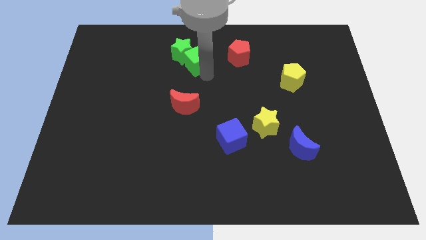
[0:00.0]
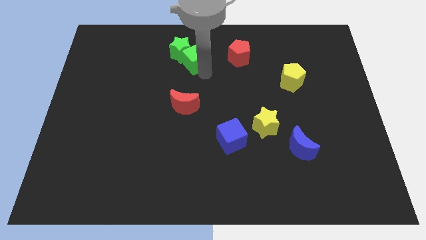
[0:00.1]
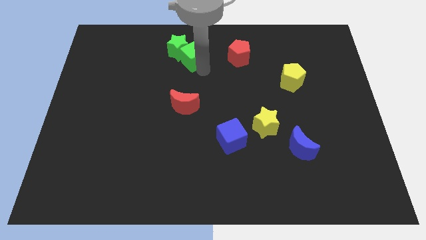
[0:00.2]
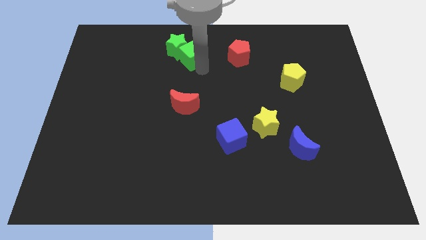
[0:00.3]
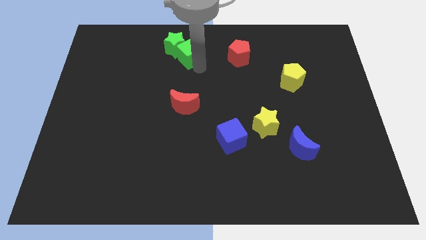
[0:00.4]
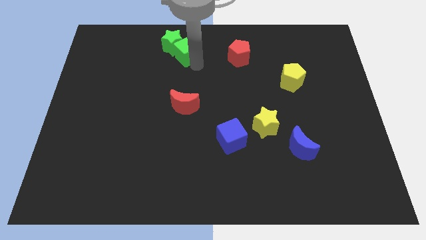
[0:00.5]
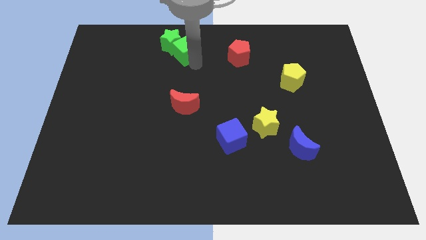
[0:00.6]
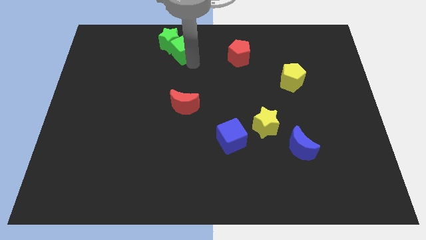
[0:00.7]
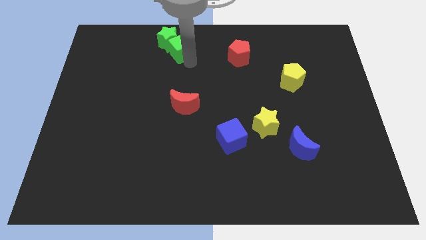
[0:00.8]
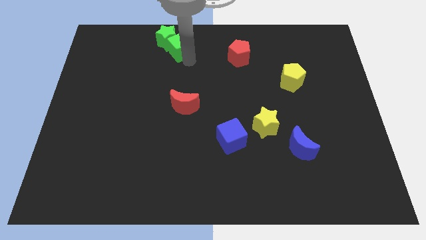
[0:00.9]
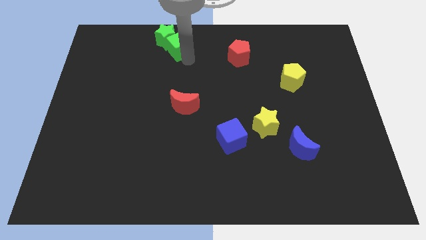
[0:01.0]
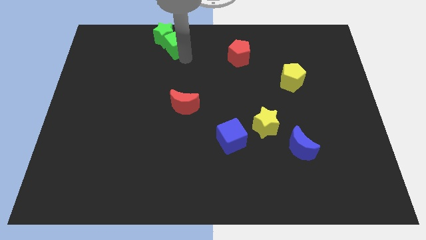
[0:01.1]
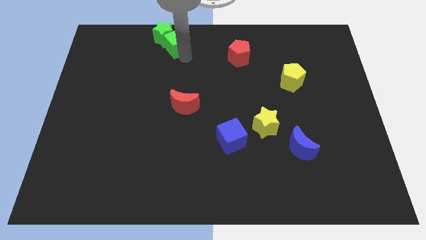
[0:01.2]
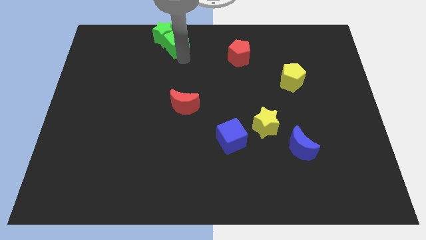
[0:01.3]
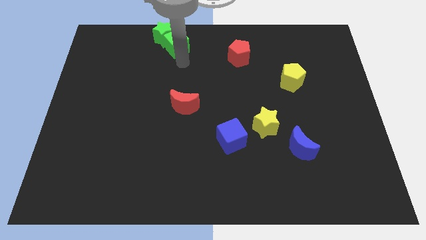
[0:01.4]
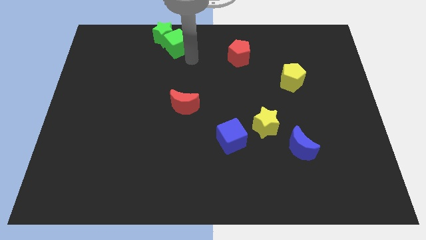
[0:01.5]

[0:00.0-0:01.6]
push the group of green blocks to the top left of the board

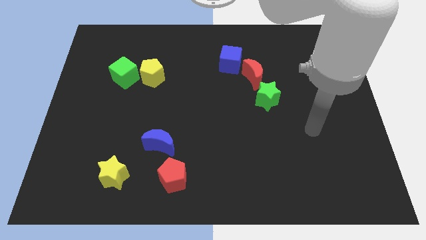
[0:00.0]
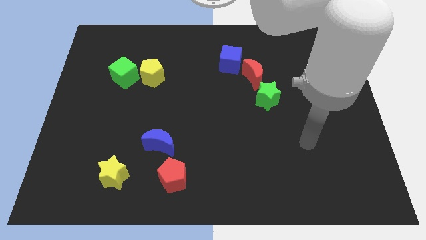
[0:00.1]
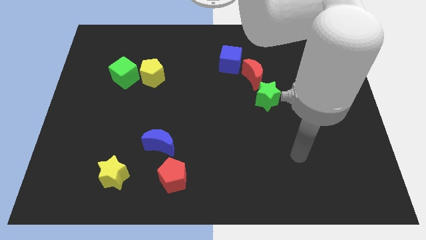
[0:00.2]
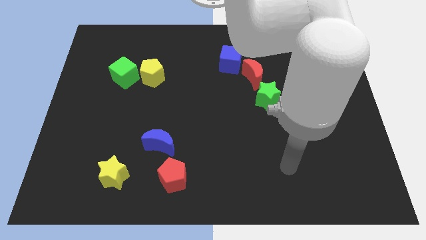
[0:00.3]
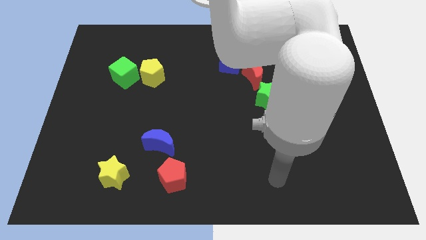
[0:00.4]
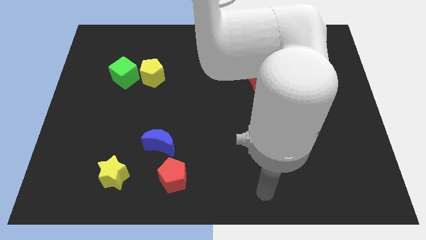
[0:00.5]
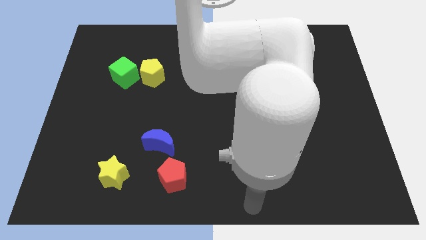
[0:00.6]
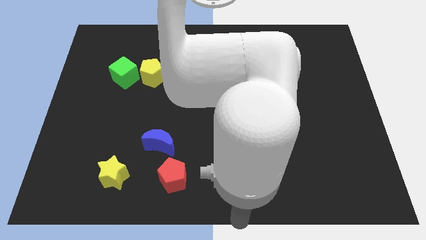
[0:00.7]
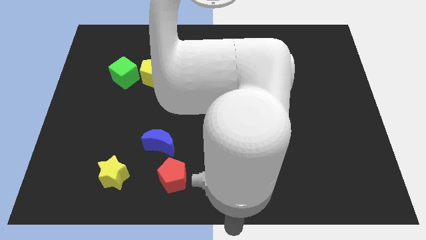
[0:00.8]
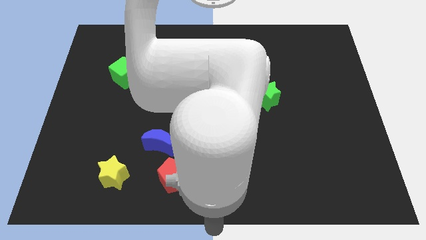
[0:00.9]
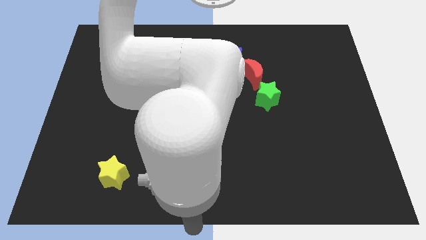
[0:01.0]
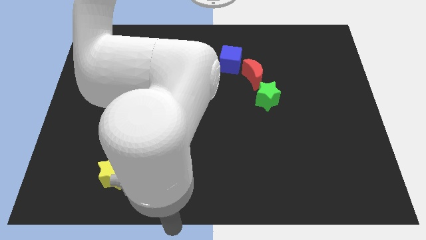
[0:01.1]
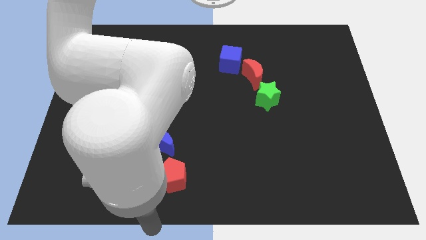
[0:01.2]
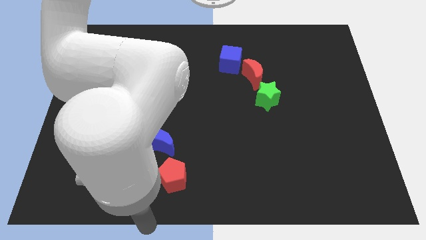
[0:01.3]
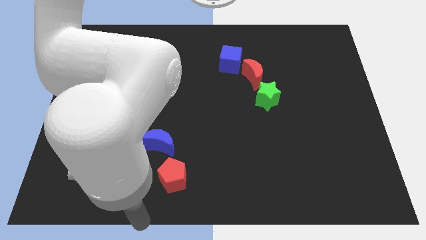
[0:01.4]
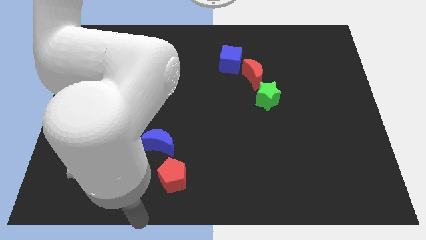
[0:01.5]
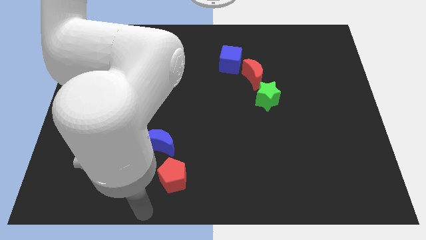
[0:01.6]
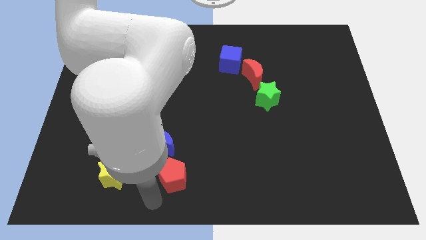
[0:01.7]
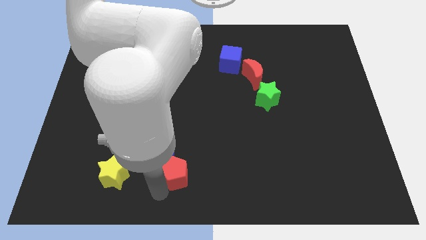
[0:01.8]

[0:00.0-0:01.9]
place your arm below red pentagon

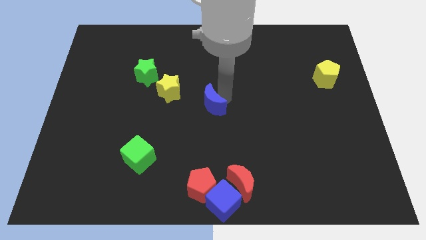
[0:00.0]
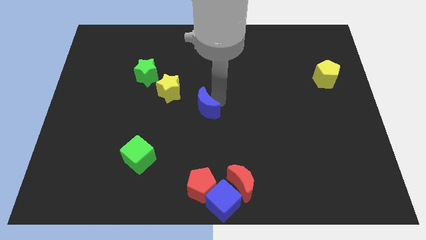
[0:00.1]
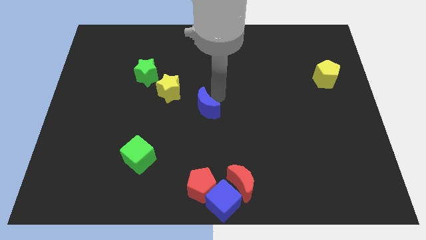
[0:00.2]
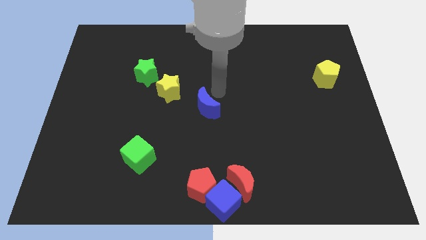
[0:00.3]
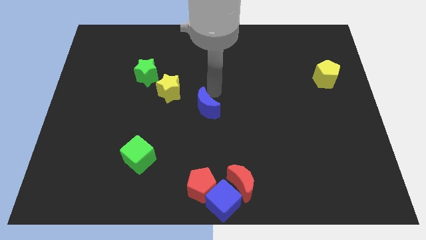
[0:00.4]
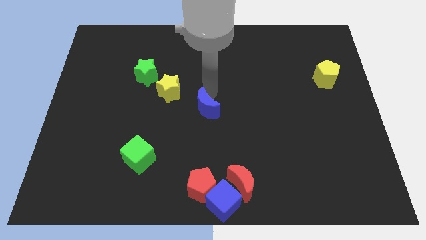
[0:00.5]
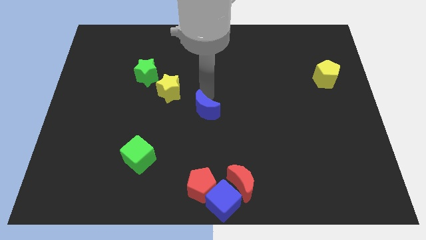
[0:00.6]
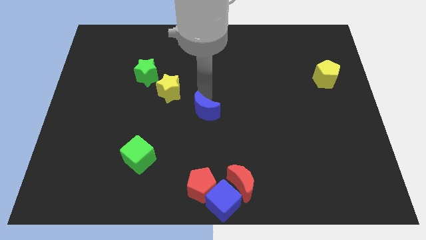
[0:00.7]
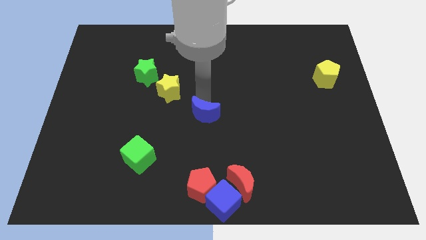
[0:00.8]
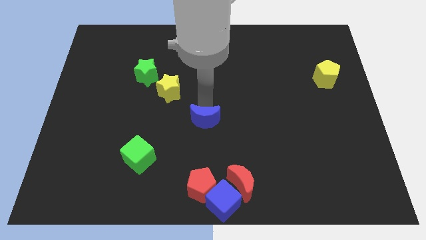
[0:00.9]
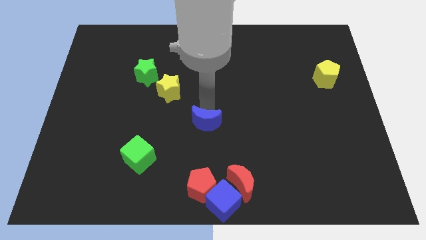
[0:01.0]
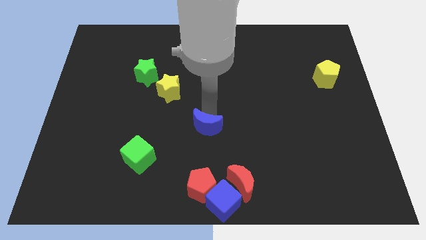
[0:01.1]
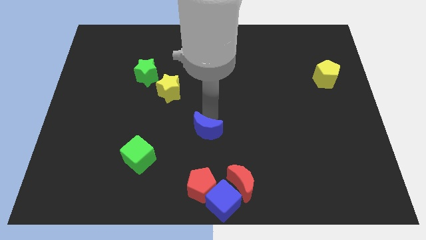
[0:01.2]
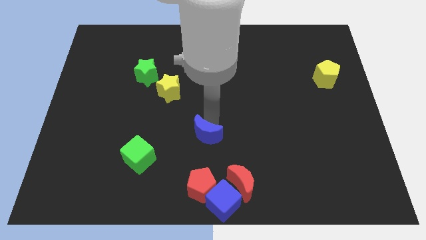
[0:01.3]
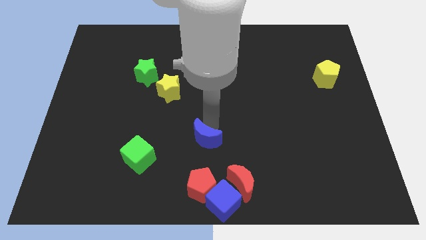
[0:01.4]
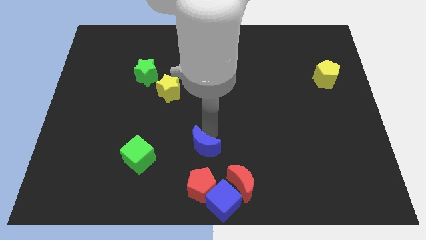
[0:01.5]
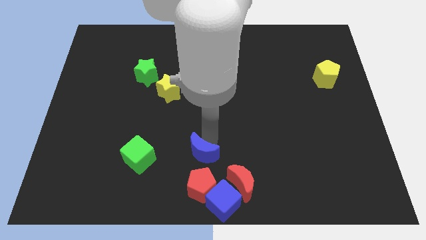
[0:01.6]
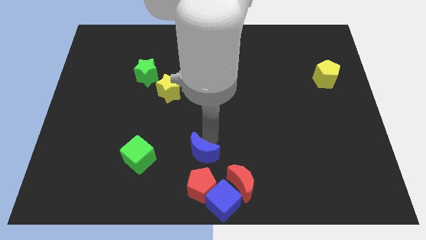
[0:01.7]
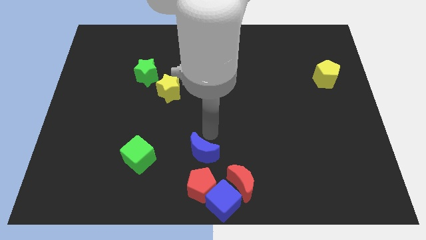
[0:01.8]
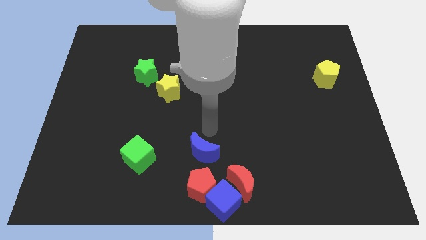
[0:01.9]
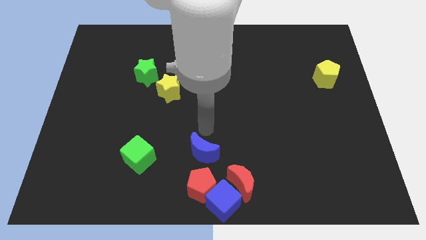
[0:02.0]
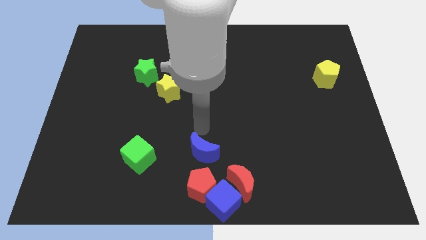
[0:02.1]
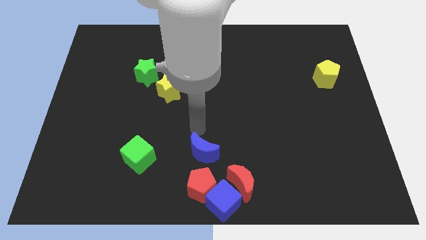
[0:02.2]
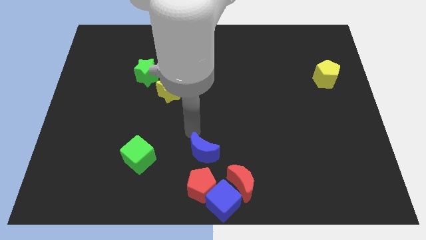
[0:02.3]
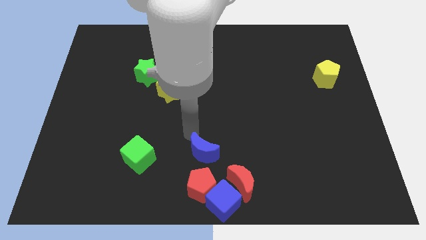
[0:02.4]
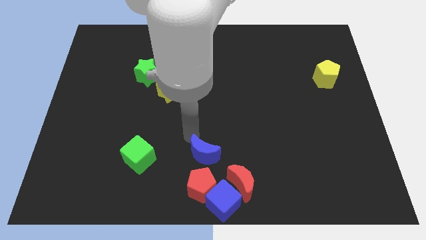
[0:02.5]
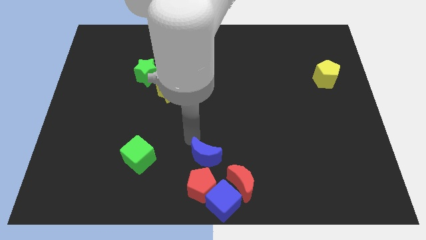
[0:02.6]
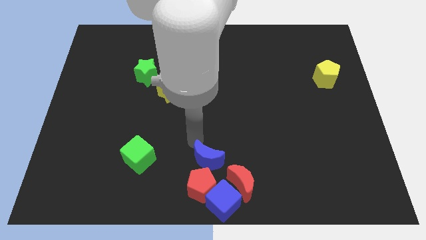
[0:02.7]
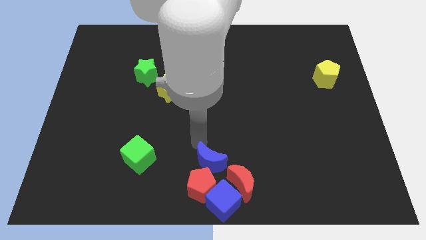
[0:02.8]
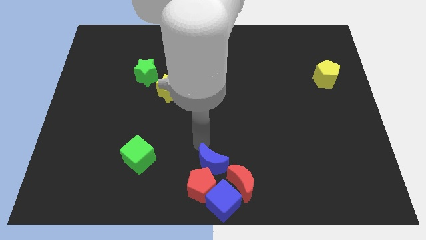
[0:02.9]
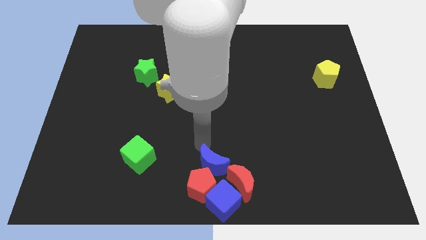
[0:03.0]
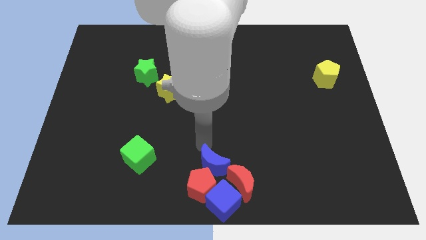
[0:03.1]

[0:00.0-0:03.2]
place the blue crescent on the top of the blue cube

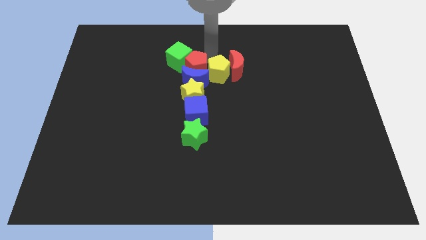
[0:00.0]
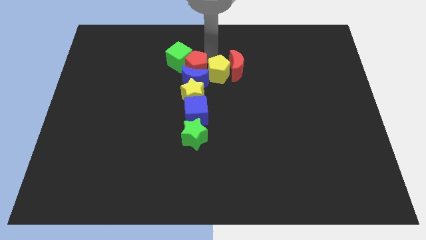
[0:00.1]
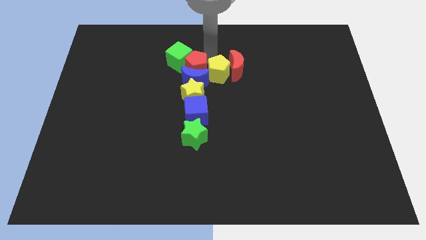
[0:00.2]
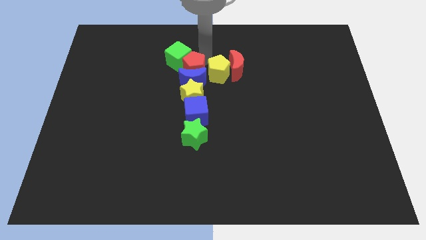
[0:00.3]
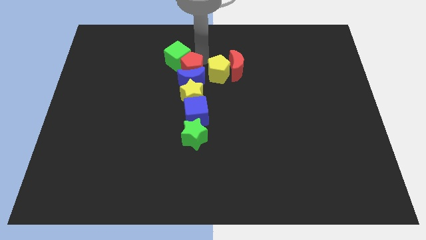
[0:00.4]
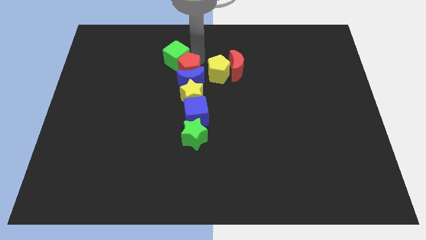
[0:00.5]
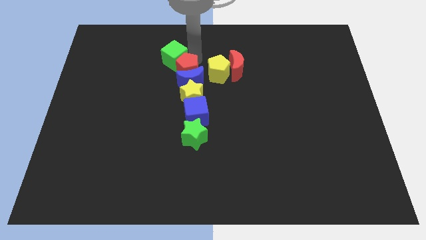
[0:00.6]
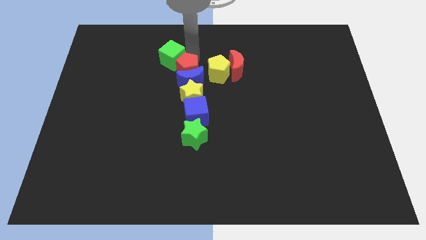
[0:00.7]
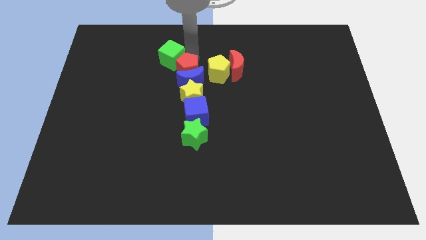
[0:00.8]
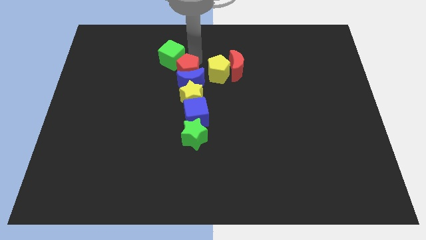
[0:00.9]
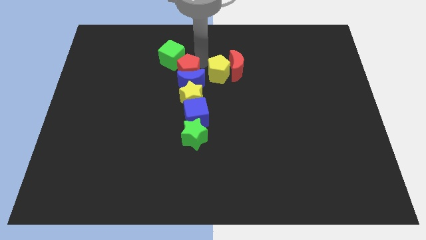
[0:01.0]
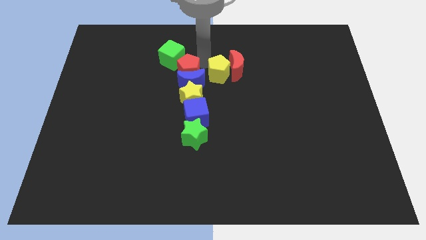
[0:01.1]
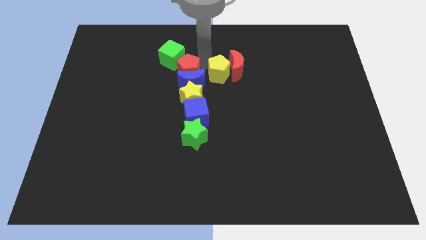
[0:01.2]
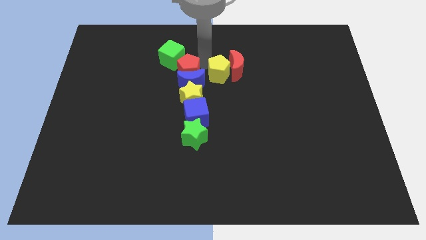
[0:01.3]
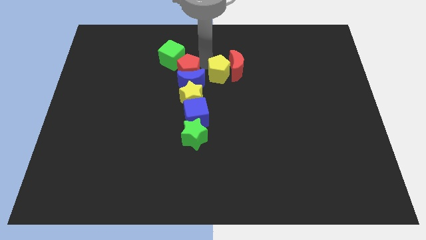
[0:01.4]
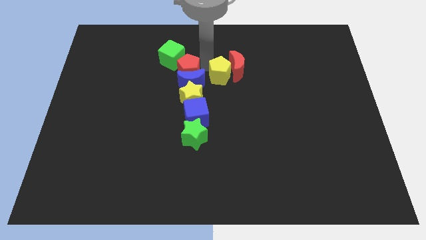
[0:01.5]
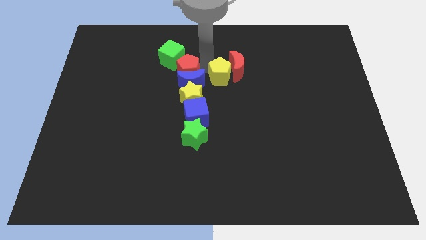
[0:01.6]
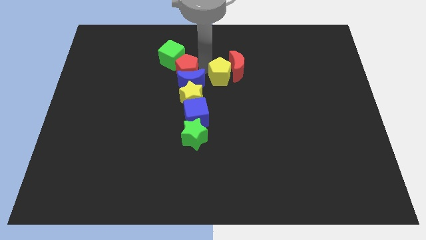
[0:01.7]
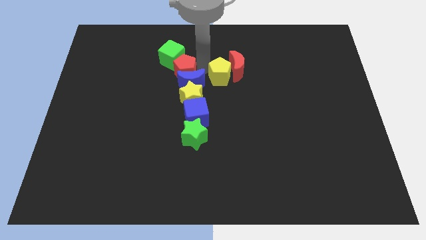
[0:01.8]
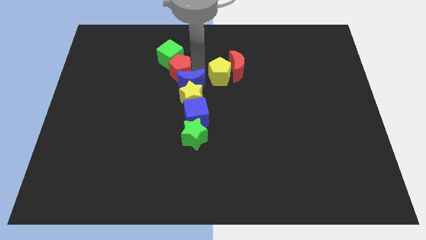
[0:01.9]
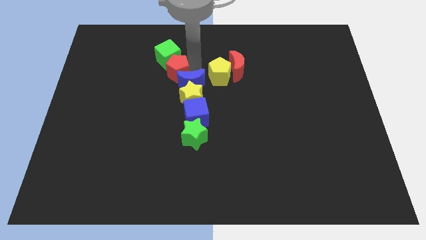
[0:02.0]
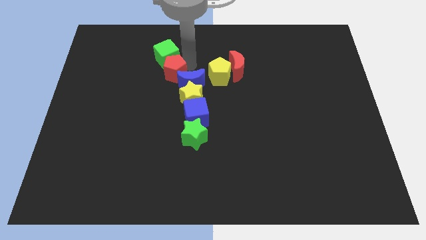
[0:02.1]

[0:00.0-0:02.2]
move your arm in between the pentagons
